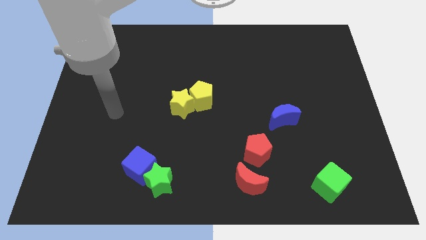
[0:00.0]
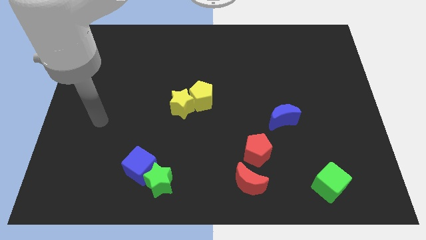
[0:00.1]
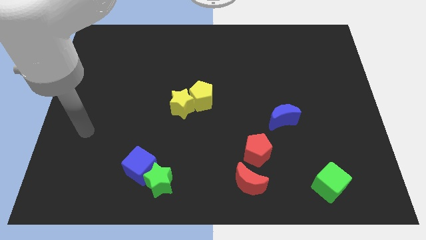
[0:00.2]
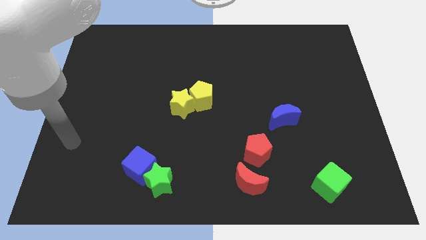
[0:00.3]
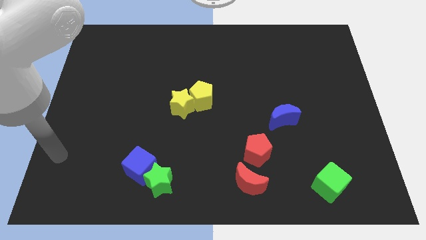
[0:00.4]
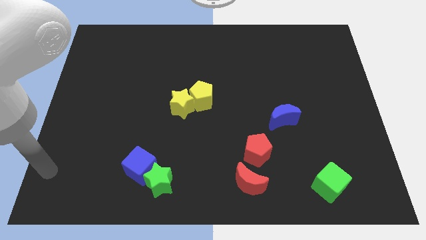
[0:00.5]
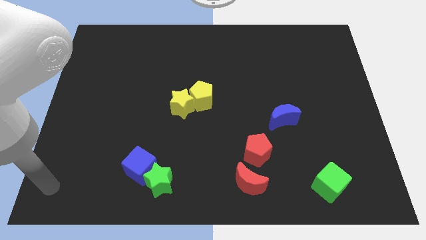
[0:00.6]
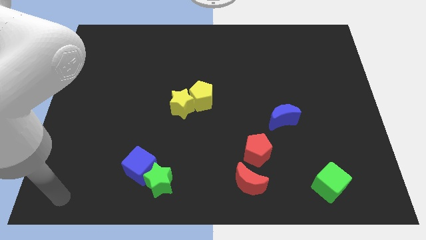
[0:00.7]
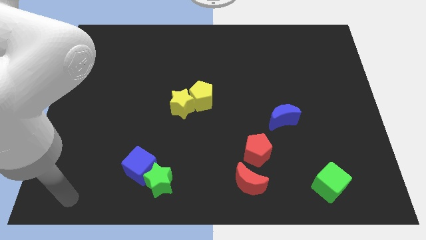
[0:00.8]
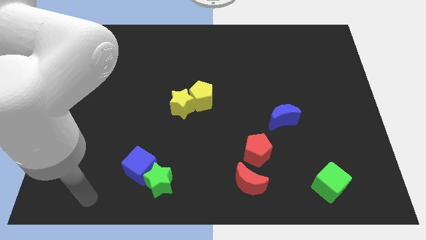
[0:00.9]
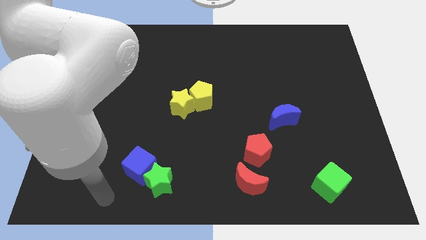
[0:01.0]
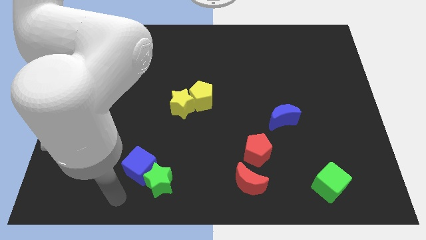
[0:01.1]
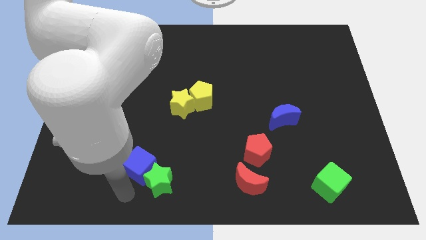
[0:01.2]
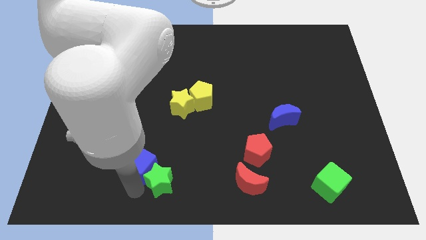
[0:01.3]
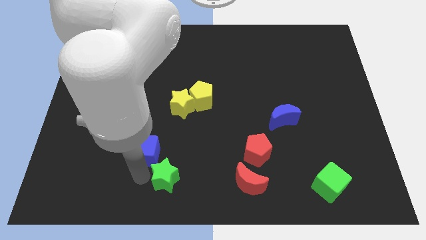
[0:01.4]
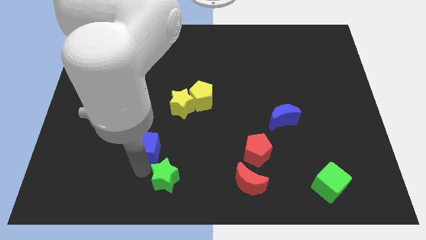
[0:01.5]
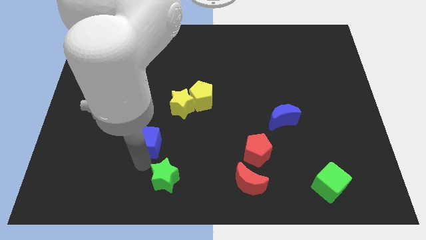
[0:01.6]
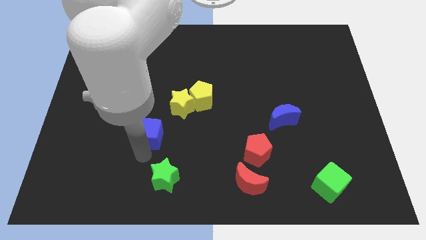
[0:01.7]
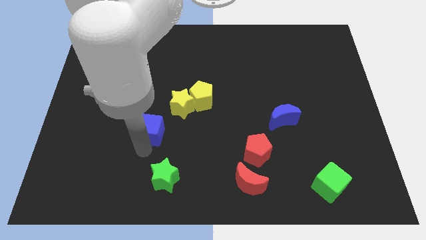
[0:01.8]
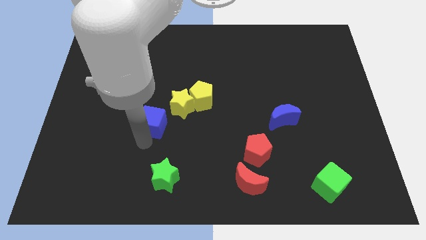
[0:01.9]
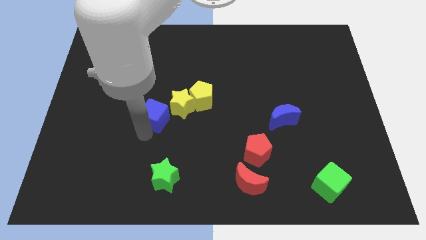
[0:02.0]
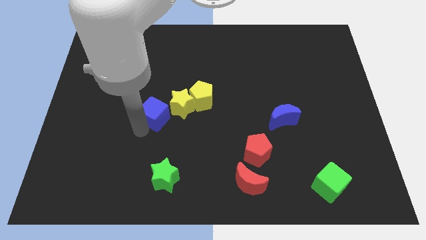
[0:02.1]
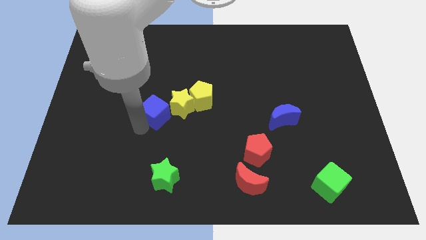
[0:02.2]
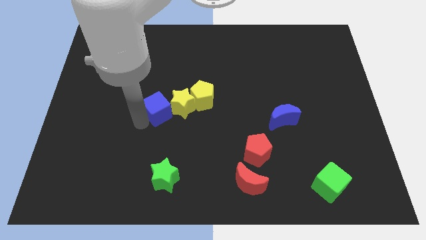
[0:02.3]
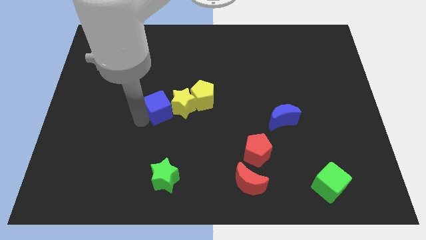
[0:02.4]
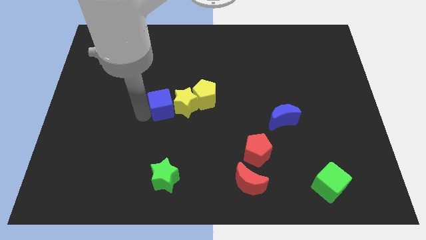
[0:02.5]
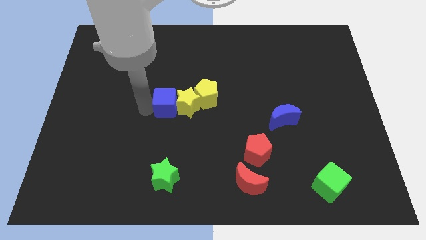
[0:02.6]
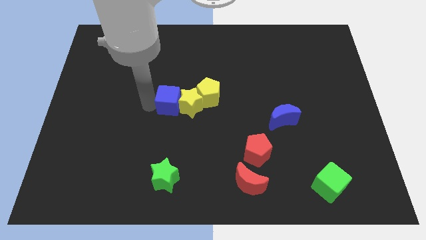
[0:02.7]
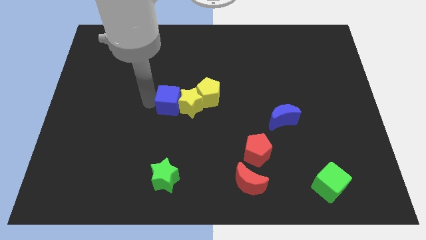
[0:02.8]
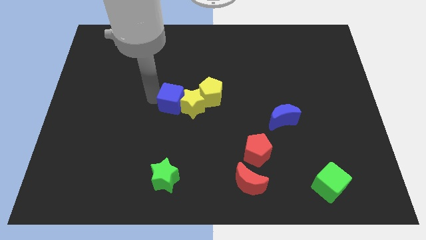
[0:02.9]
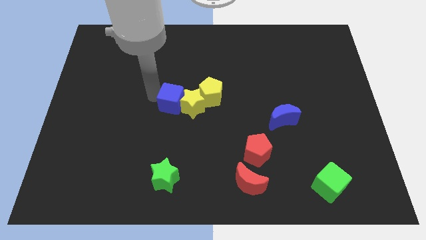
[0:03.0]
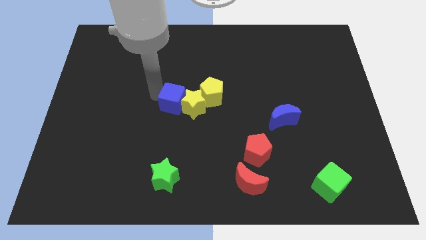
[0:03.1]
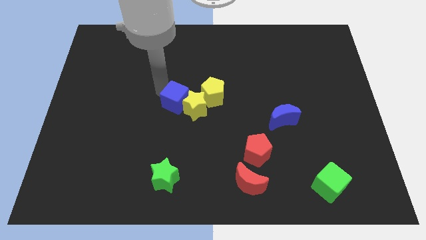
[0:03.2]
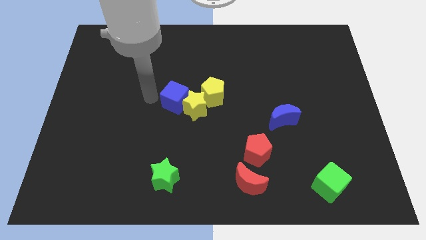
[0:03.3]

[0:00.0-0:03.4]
move the blue cube into the yellow star

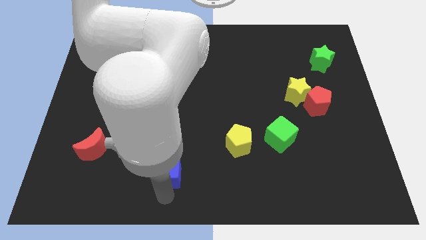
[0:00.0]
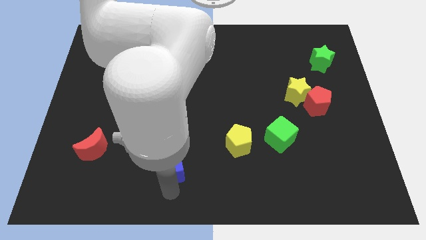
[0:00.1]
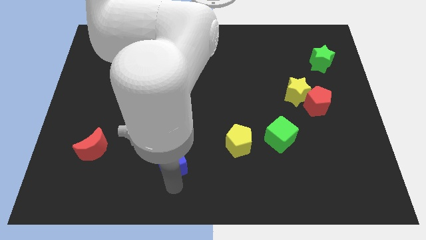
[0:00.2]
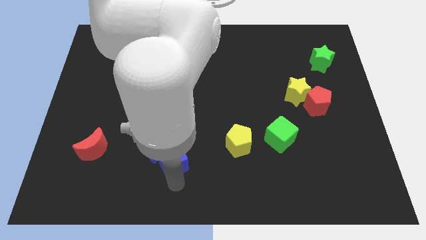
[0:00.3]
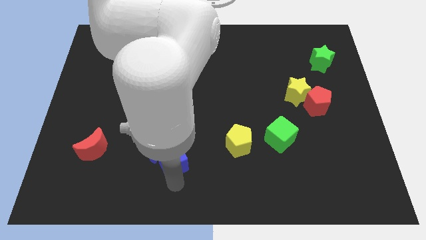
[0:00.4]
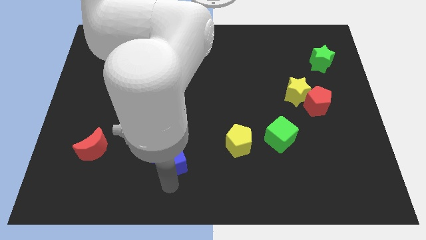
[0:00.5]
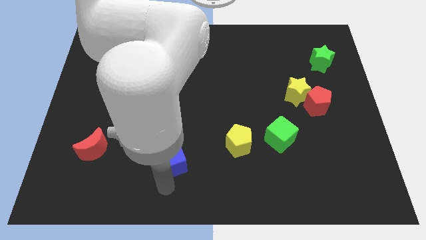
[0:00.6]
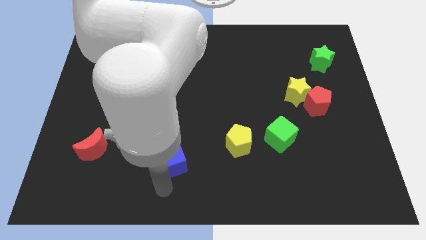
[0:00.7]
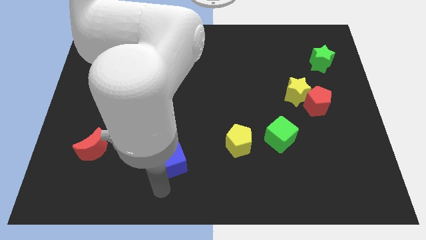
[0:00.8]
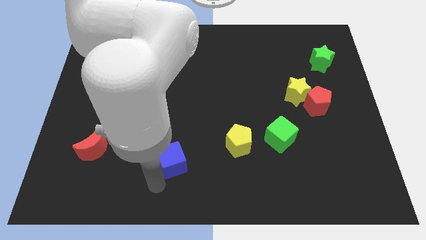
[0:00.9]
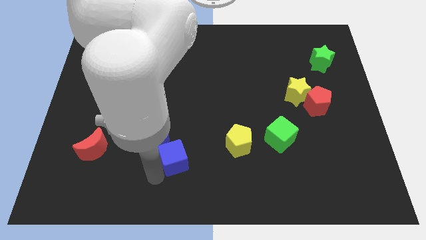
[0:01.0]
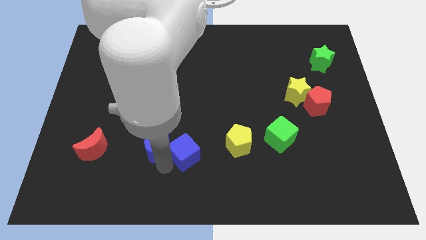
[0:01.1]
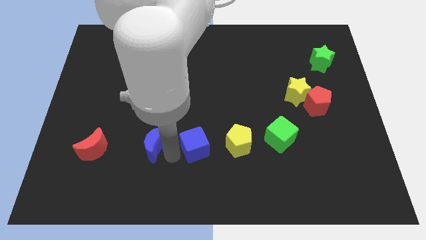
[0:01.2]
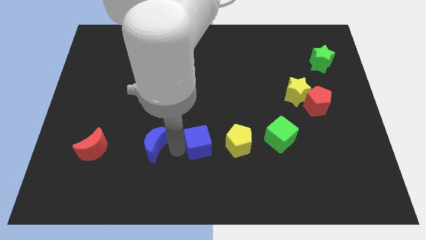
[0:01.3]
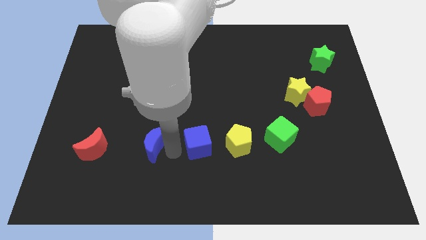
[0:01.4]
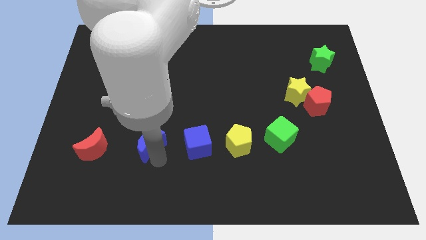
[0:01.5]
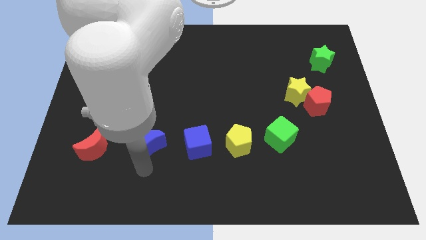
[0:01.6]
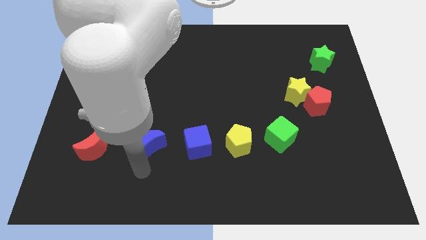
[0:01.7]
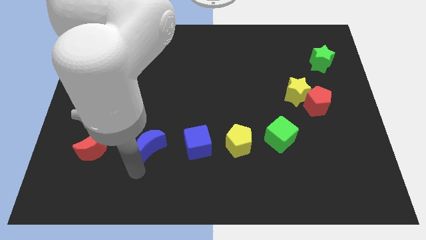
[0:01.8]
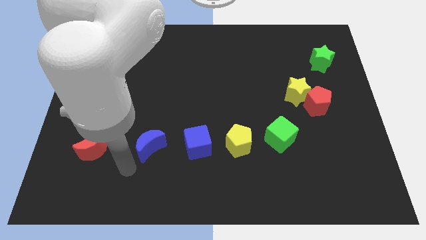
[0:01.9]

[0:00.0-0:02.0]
place the blue cube beside the yellow pentagon

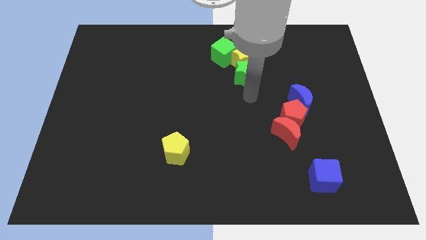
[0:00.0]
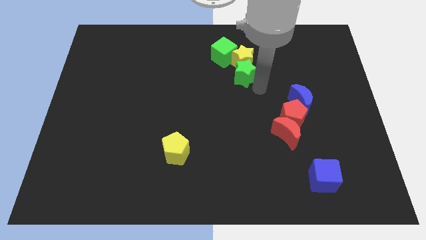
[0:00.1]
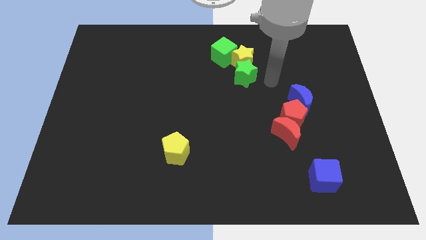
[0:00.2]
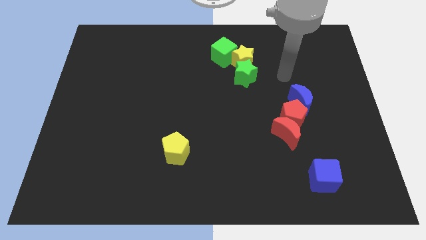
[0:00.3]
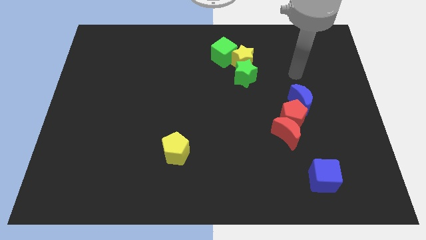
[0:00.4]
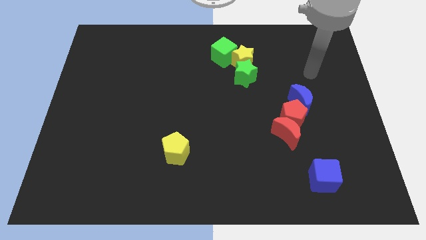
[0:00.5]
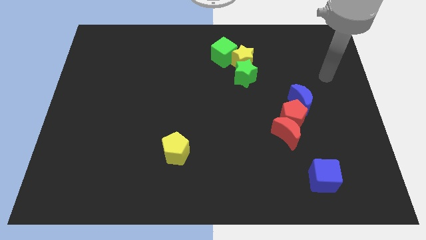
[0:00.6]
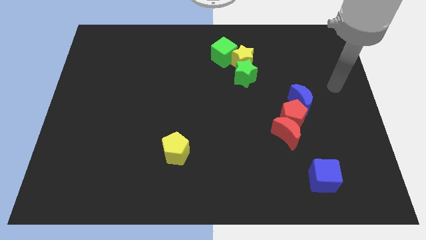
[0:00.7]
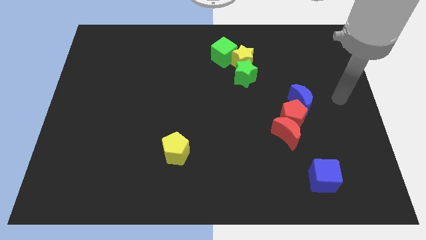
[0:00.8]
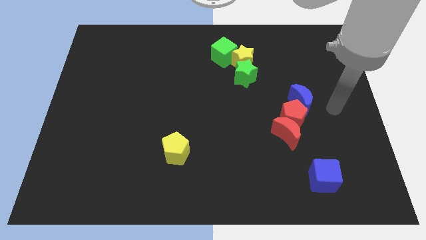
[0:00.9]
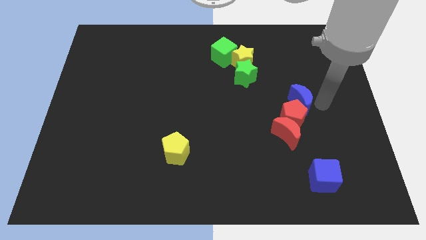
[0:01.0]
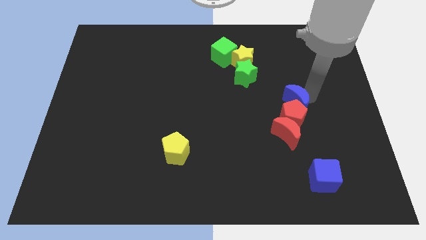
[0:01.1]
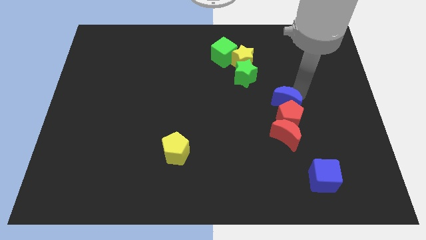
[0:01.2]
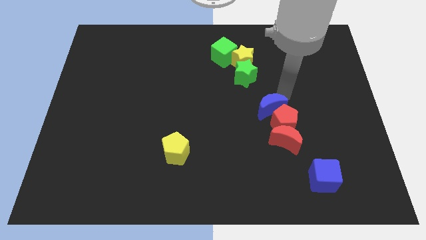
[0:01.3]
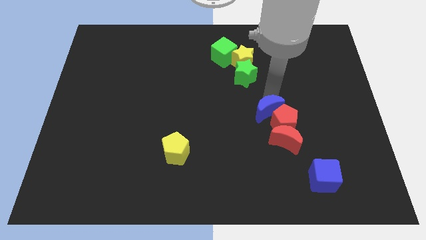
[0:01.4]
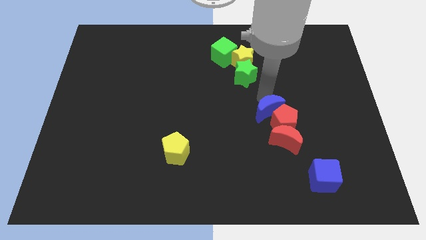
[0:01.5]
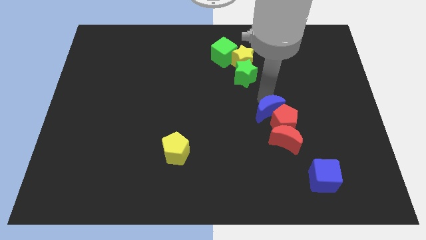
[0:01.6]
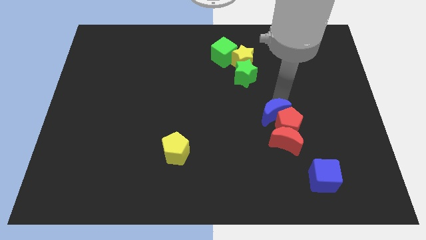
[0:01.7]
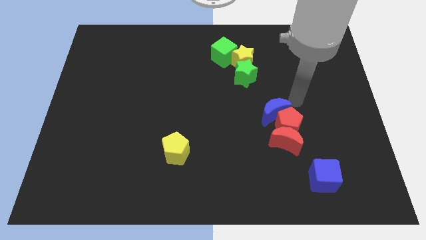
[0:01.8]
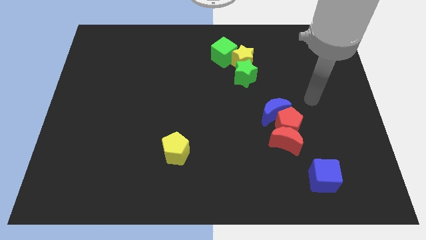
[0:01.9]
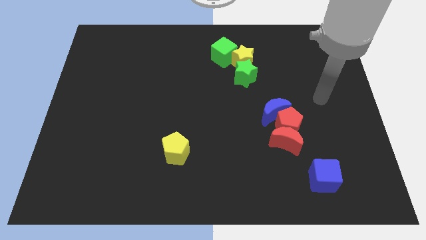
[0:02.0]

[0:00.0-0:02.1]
place the arm behind the blue crescent

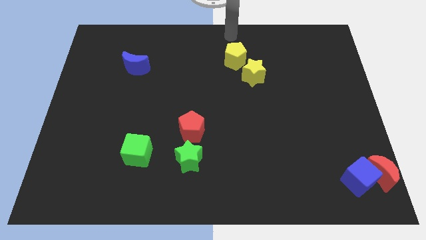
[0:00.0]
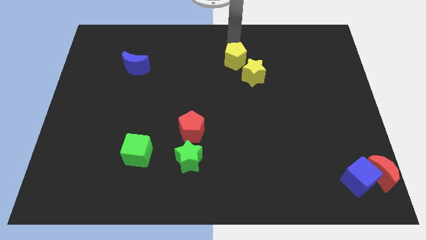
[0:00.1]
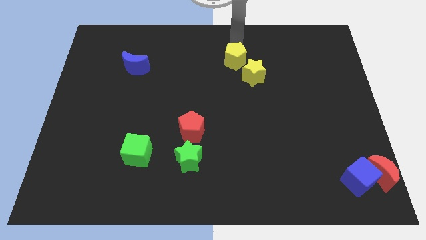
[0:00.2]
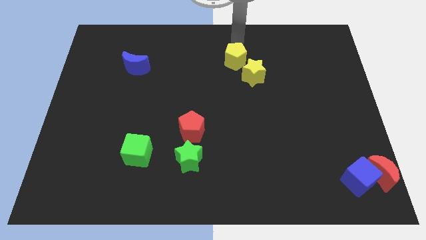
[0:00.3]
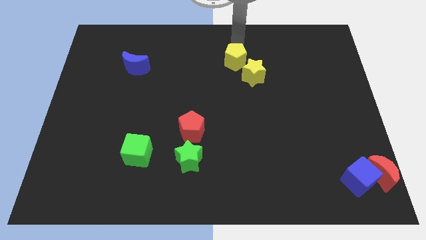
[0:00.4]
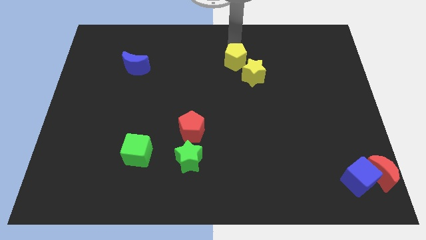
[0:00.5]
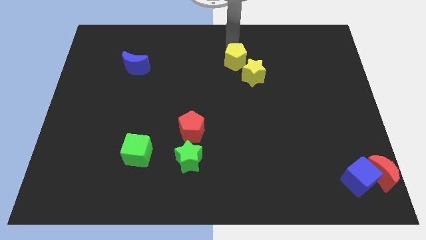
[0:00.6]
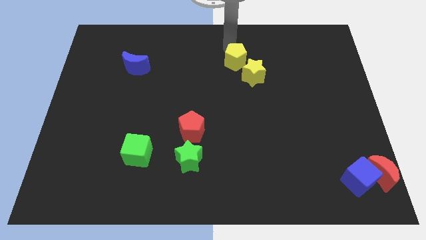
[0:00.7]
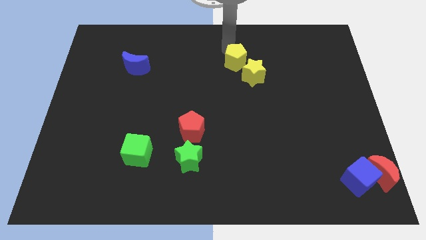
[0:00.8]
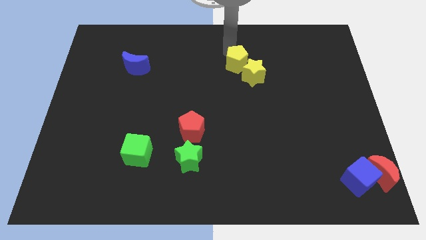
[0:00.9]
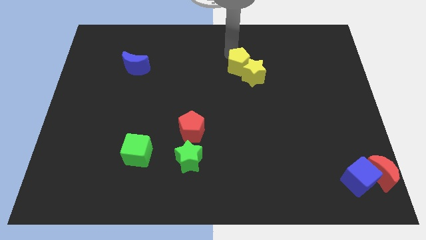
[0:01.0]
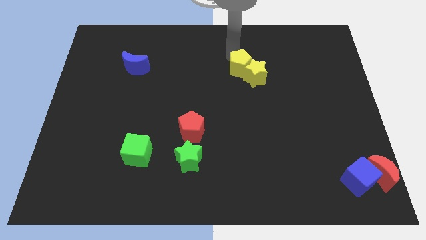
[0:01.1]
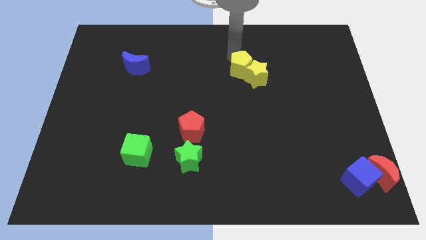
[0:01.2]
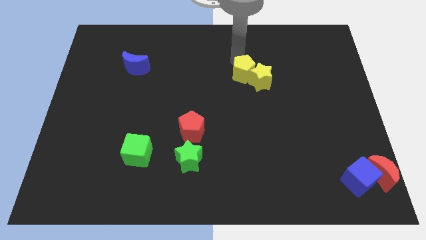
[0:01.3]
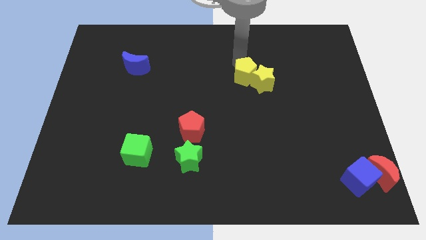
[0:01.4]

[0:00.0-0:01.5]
move the yellow pentagon into the yellow star
